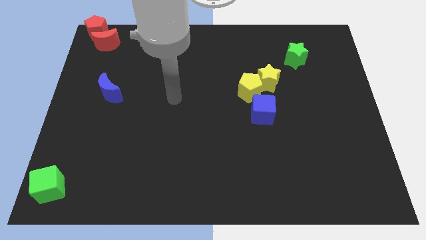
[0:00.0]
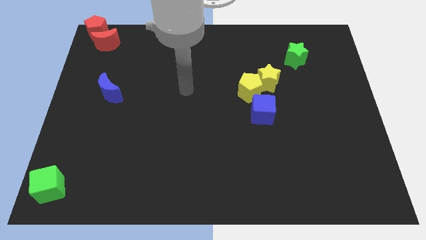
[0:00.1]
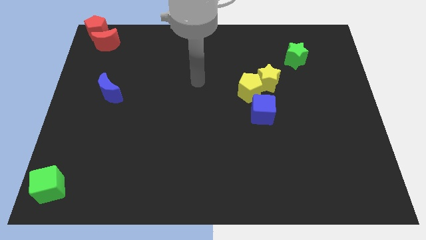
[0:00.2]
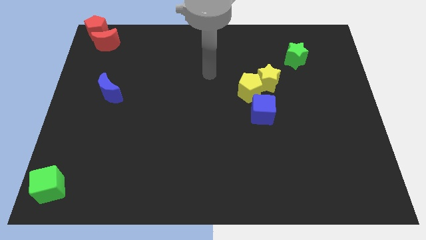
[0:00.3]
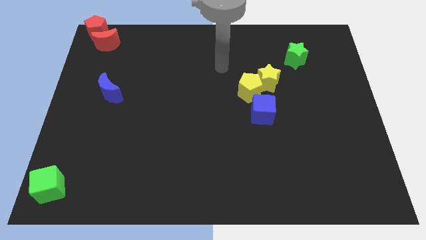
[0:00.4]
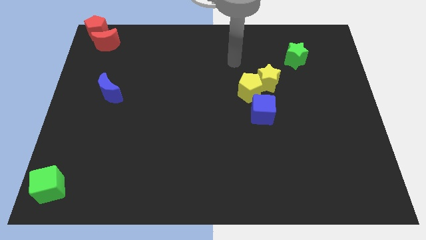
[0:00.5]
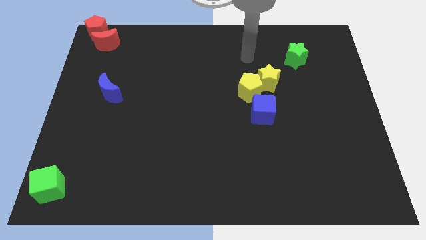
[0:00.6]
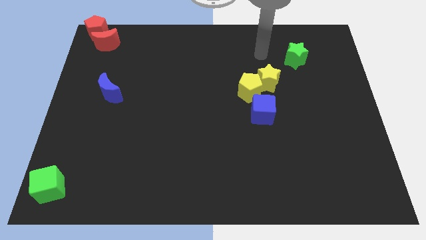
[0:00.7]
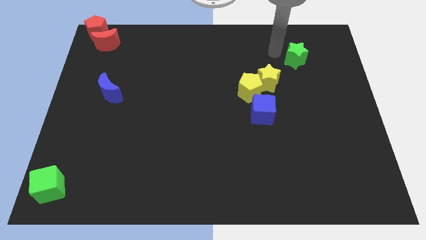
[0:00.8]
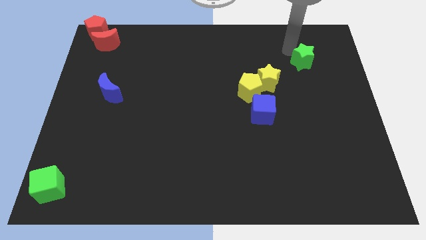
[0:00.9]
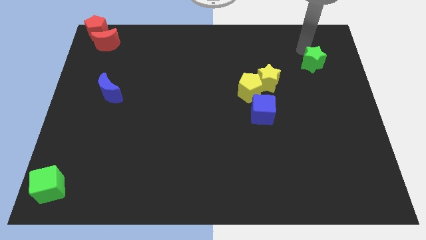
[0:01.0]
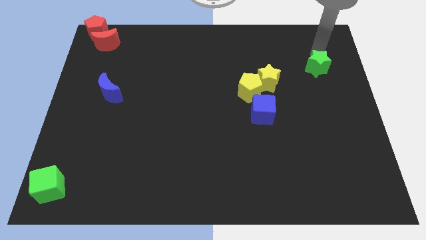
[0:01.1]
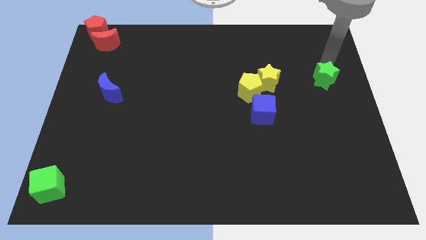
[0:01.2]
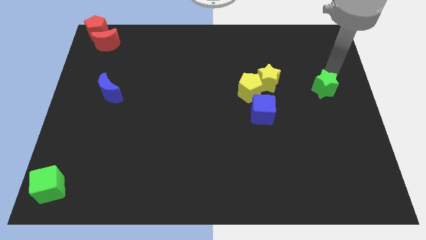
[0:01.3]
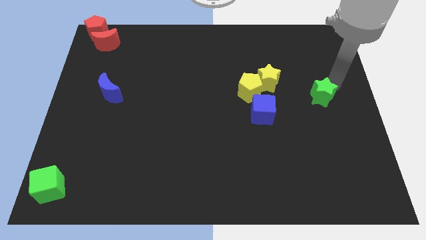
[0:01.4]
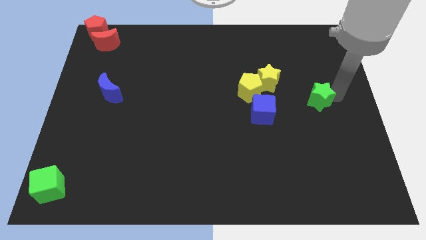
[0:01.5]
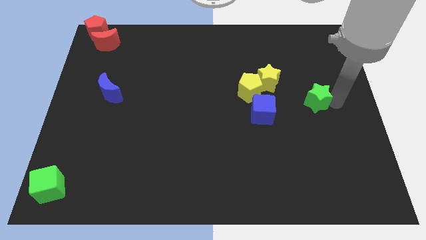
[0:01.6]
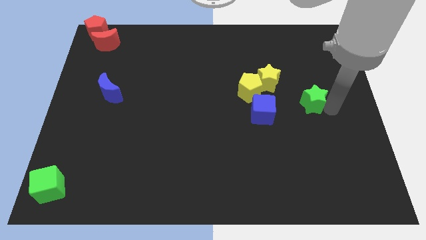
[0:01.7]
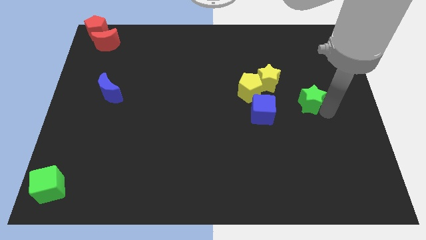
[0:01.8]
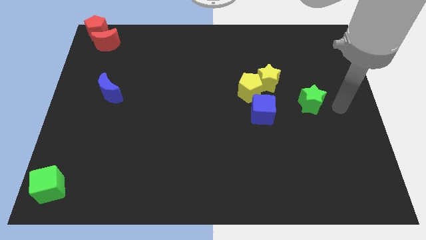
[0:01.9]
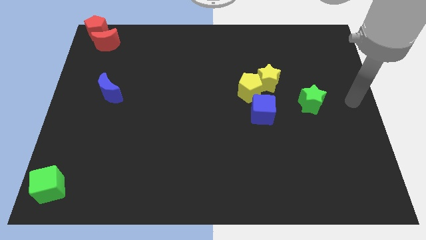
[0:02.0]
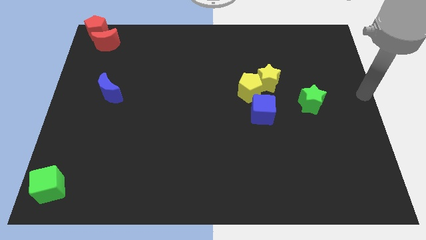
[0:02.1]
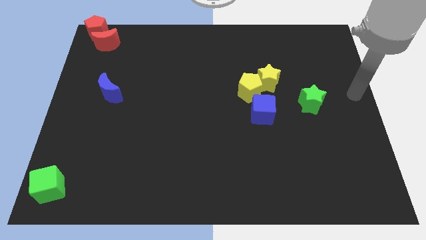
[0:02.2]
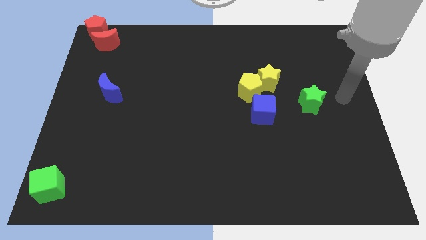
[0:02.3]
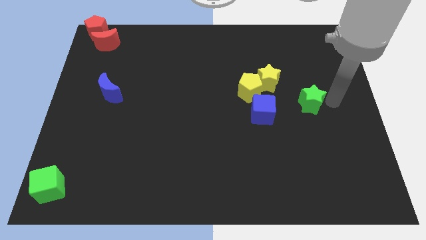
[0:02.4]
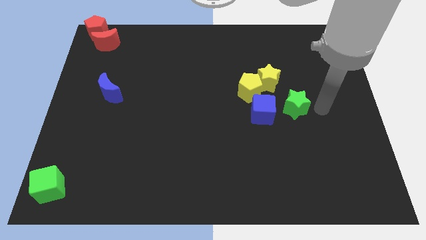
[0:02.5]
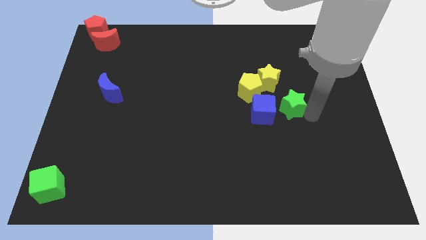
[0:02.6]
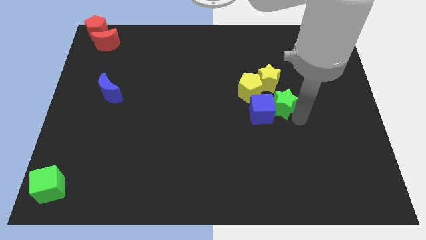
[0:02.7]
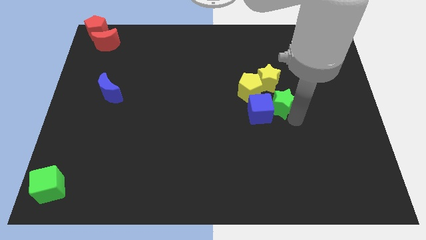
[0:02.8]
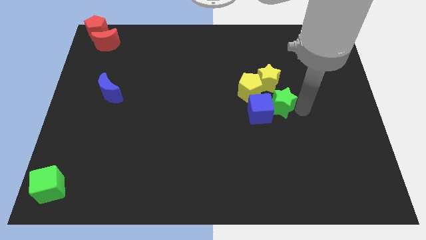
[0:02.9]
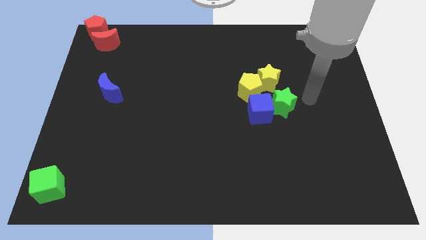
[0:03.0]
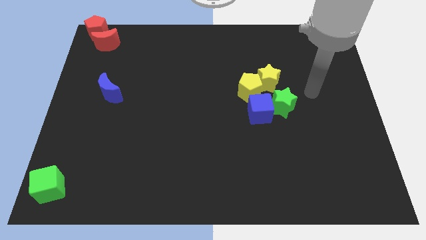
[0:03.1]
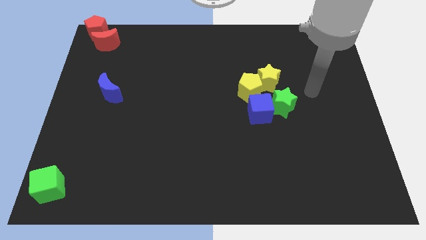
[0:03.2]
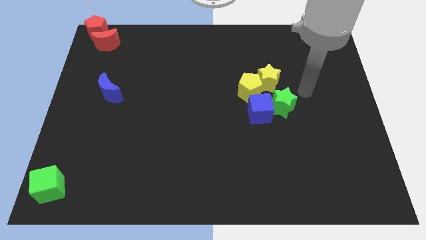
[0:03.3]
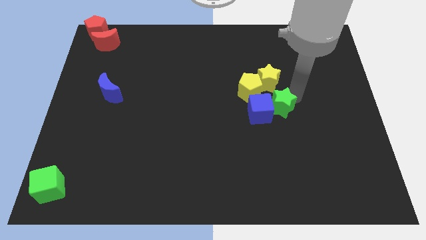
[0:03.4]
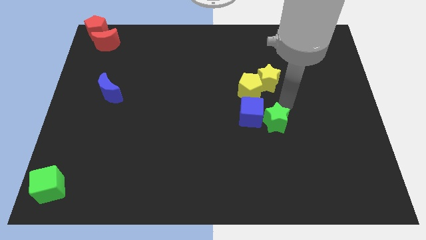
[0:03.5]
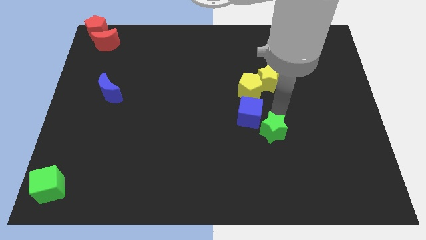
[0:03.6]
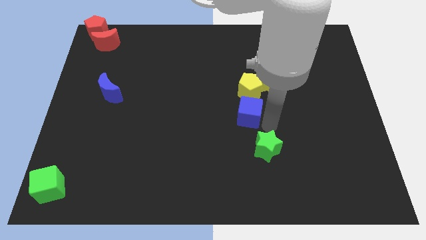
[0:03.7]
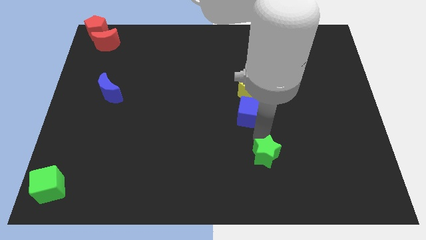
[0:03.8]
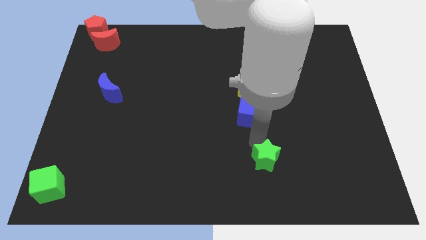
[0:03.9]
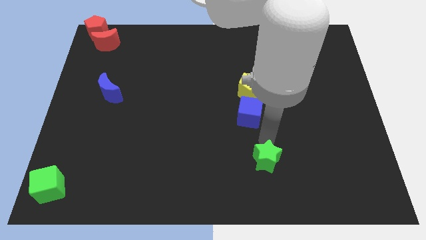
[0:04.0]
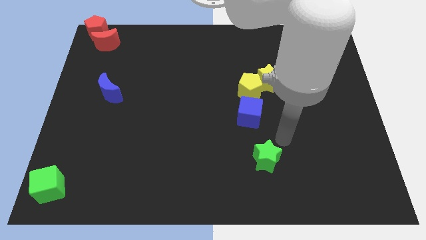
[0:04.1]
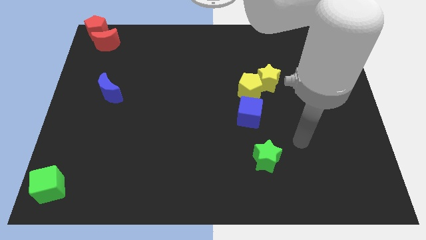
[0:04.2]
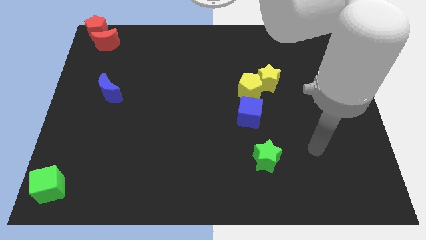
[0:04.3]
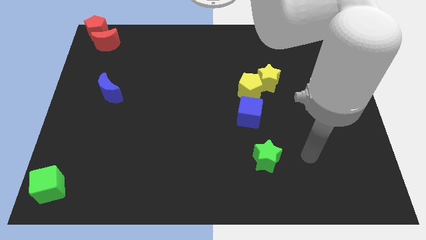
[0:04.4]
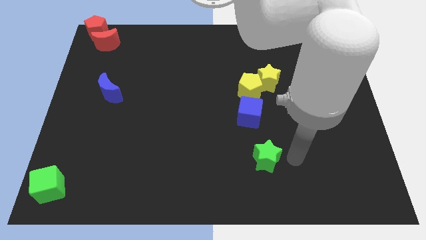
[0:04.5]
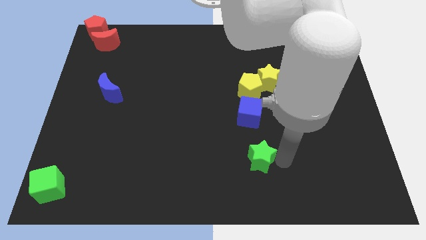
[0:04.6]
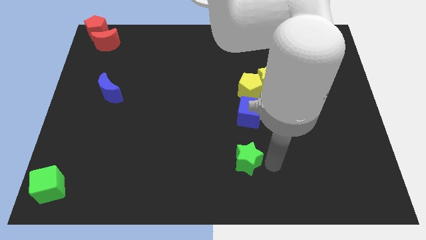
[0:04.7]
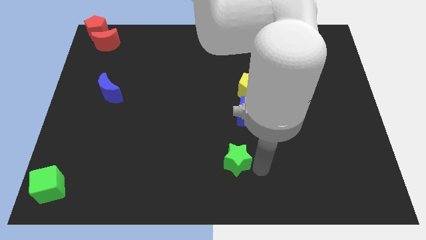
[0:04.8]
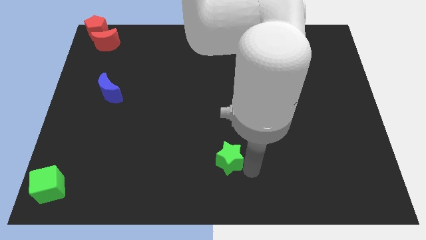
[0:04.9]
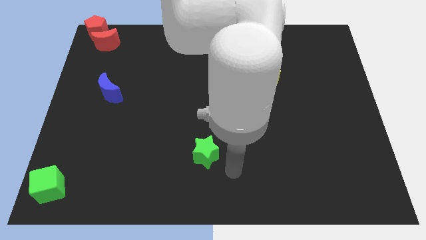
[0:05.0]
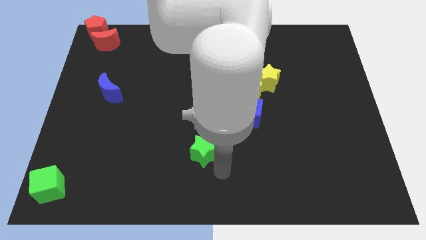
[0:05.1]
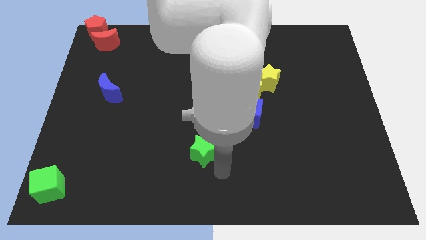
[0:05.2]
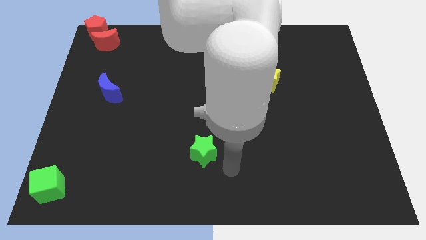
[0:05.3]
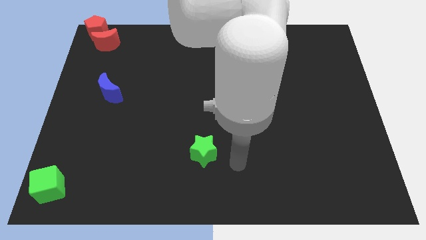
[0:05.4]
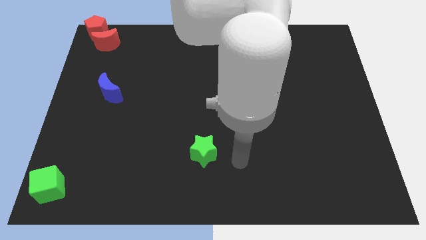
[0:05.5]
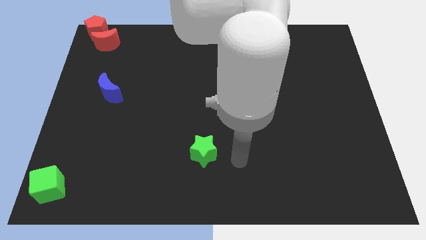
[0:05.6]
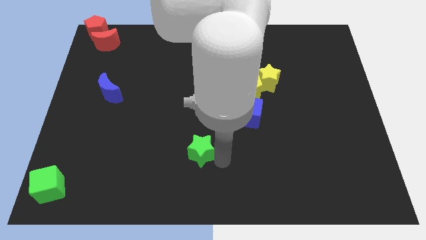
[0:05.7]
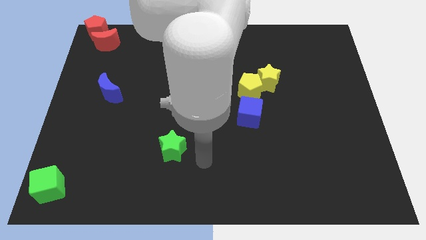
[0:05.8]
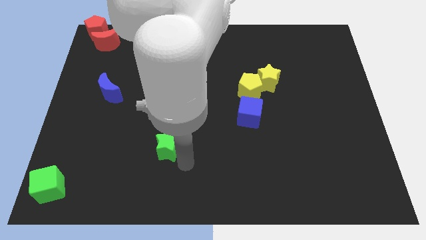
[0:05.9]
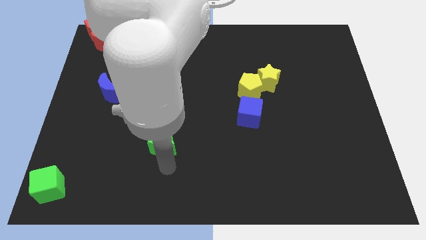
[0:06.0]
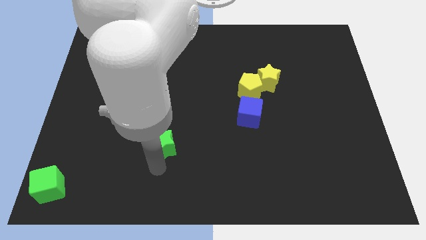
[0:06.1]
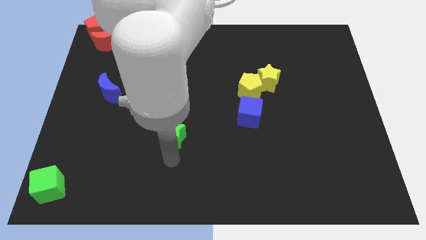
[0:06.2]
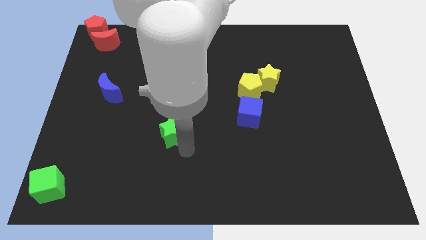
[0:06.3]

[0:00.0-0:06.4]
move the green star slightly to the left side of the board

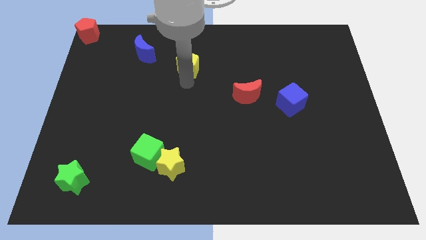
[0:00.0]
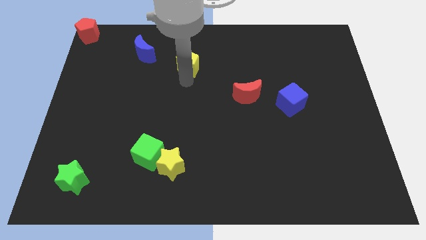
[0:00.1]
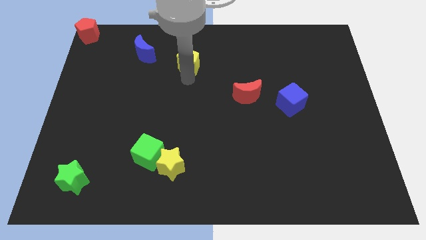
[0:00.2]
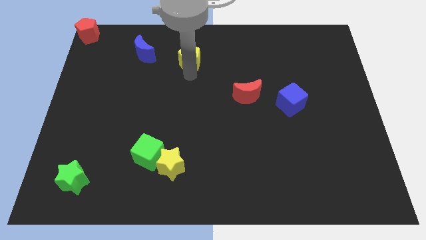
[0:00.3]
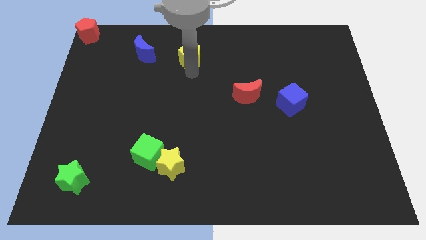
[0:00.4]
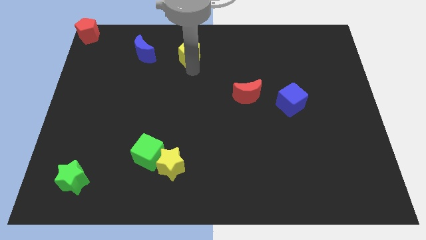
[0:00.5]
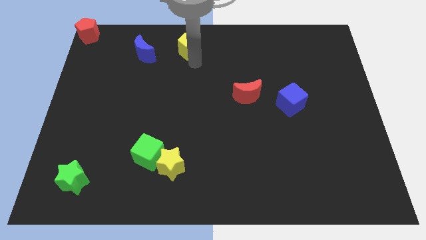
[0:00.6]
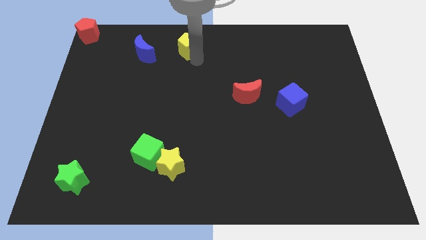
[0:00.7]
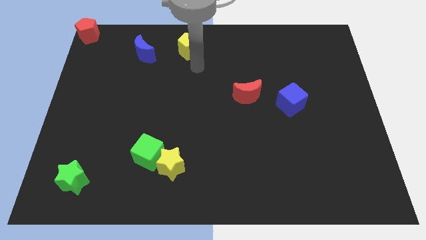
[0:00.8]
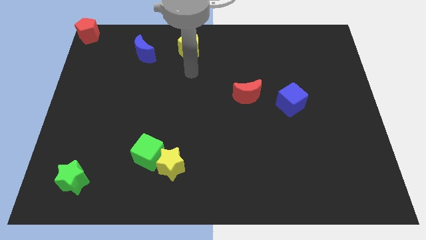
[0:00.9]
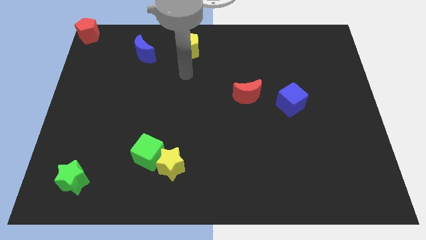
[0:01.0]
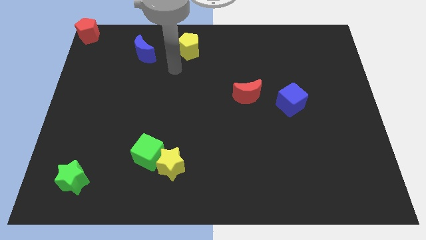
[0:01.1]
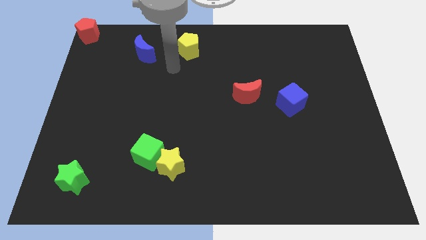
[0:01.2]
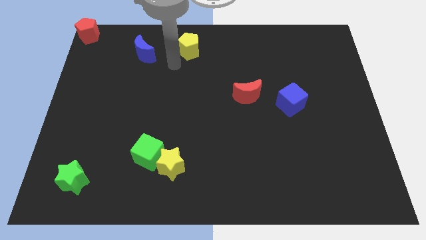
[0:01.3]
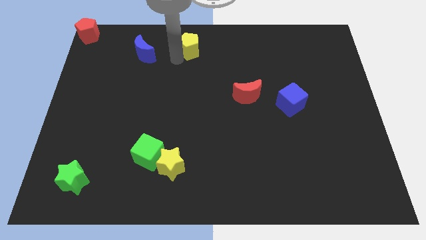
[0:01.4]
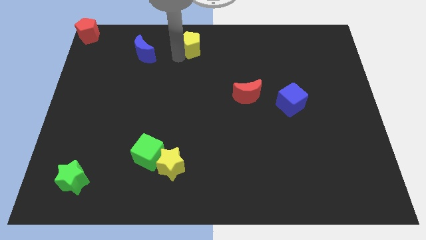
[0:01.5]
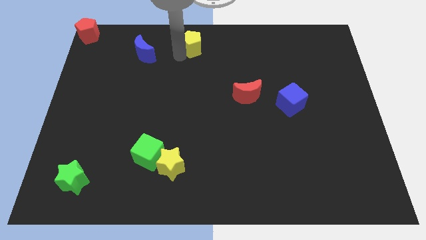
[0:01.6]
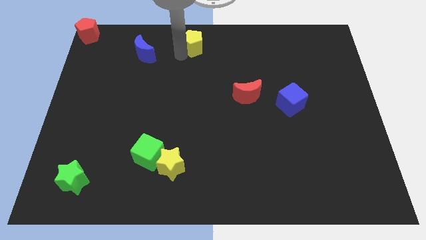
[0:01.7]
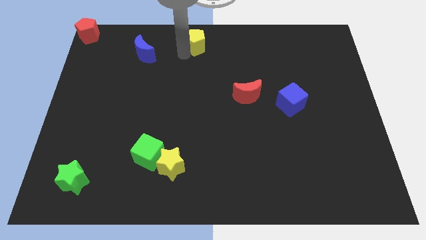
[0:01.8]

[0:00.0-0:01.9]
put the yellow pentagon to the right of the blue crescent

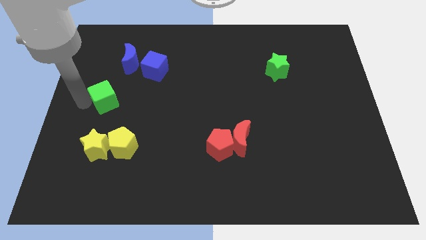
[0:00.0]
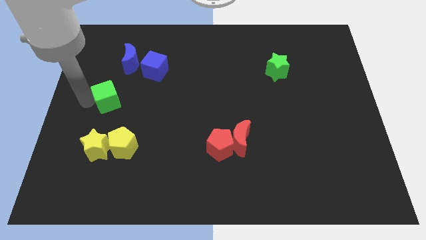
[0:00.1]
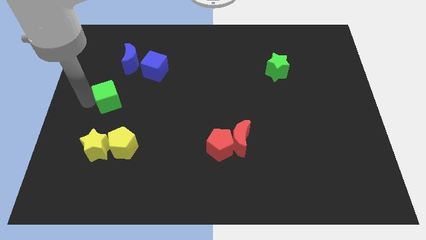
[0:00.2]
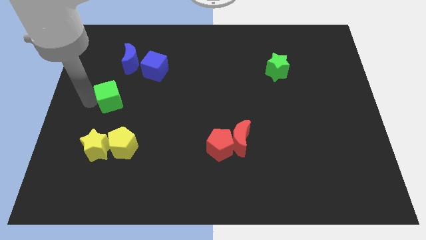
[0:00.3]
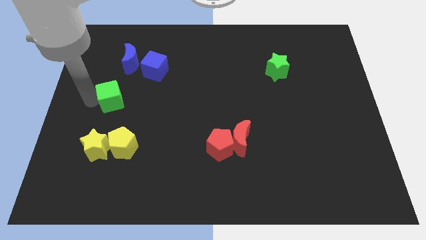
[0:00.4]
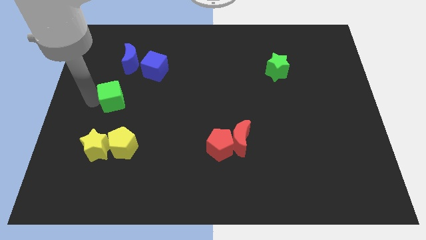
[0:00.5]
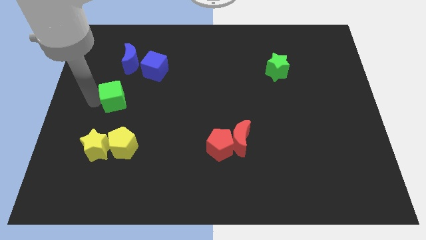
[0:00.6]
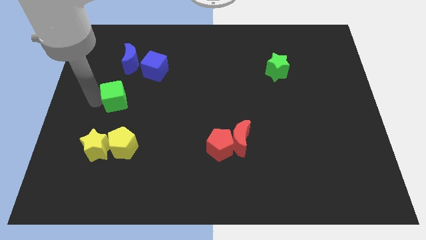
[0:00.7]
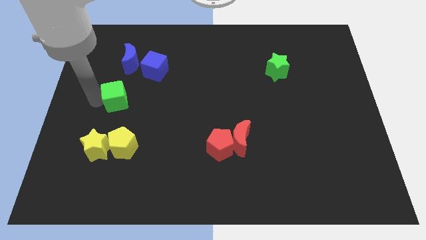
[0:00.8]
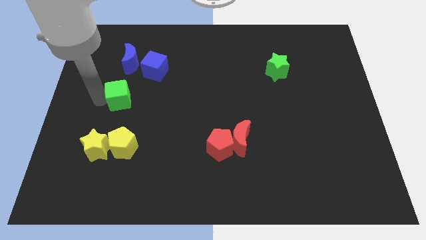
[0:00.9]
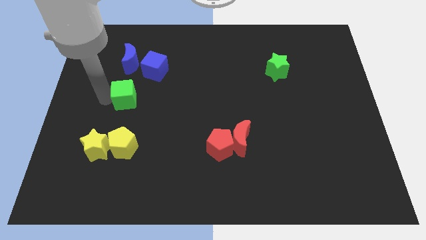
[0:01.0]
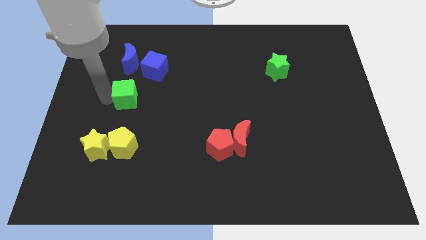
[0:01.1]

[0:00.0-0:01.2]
push the green cube to the bottom of the blue crescent
